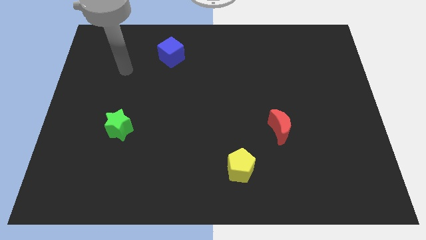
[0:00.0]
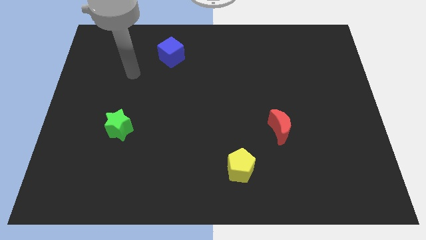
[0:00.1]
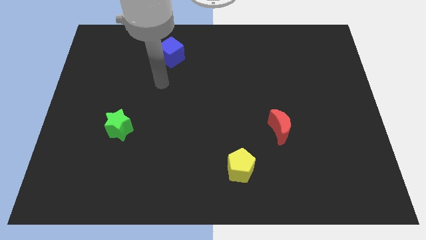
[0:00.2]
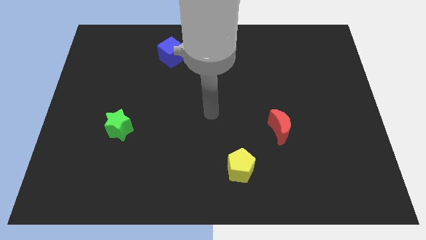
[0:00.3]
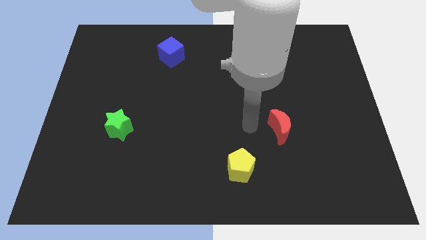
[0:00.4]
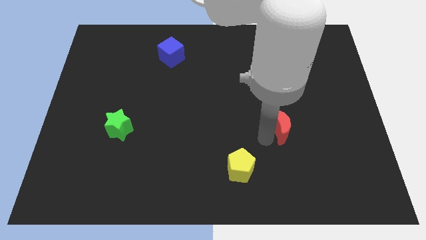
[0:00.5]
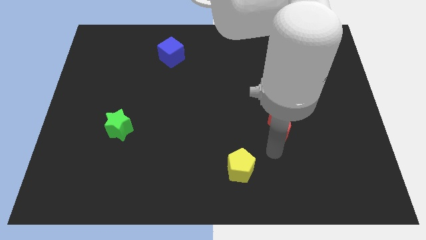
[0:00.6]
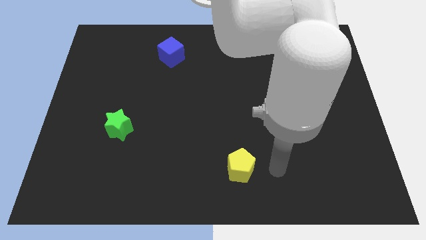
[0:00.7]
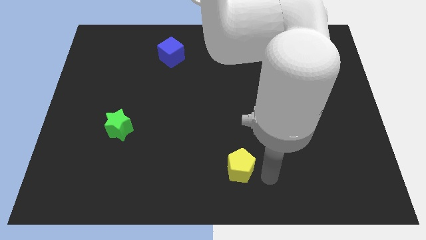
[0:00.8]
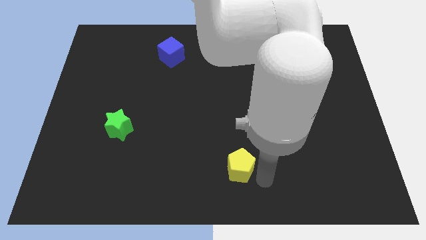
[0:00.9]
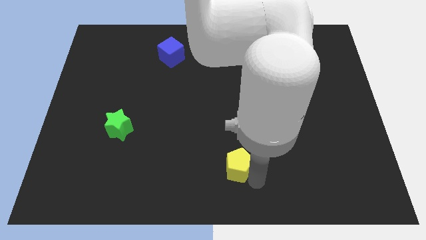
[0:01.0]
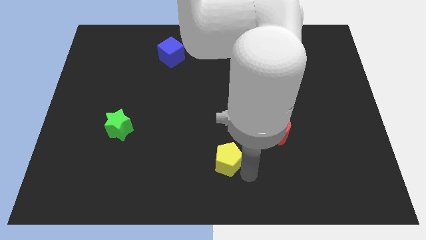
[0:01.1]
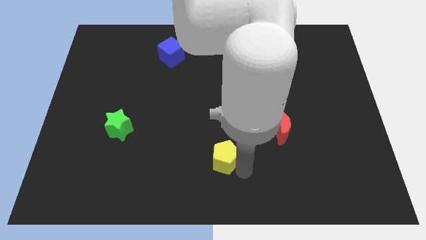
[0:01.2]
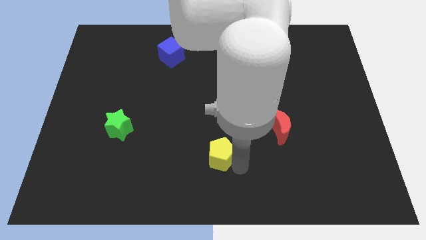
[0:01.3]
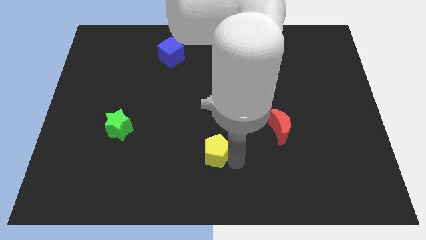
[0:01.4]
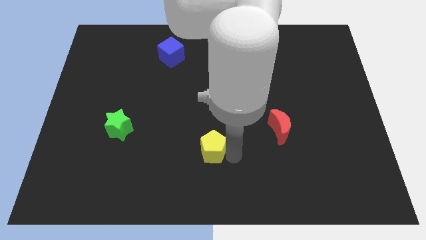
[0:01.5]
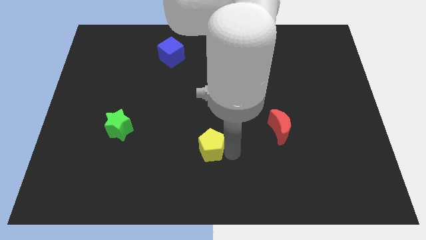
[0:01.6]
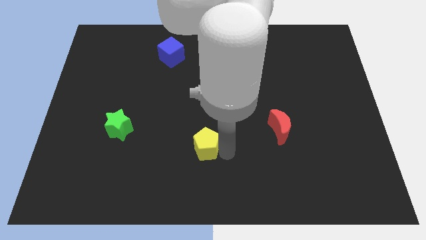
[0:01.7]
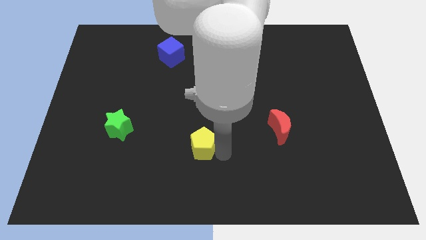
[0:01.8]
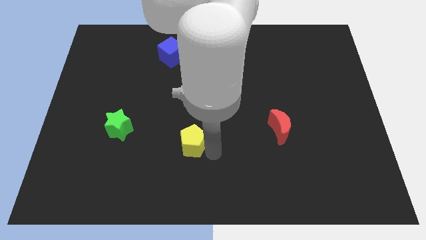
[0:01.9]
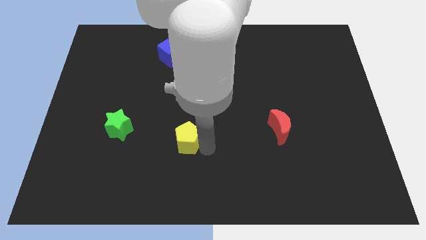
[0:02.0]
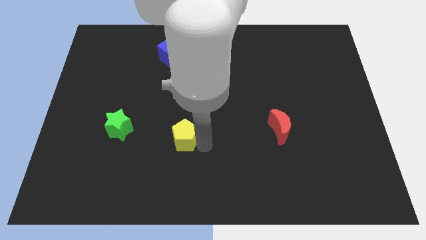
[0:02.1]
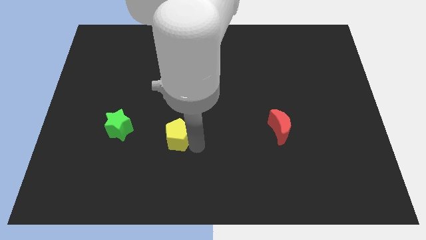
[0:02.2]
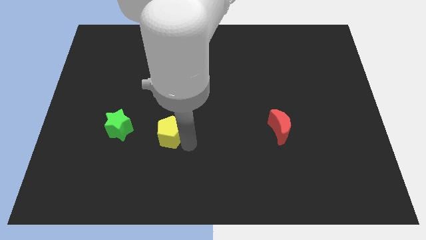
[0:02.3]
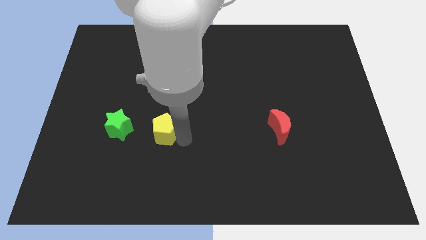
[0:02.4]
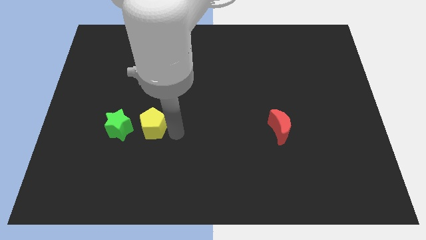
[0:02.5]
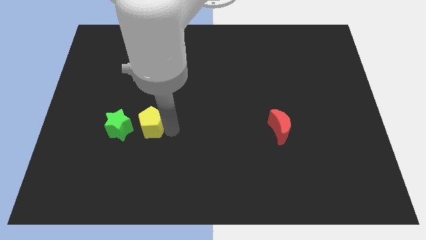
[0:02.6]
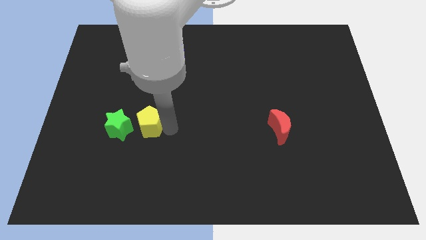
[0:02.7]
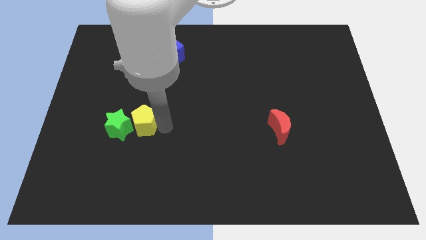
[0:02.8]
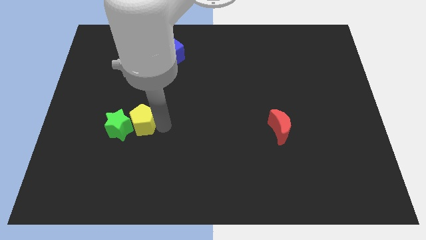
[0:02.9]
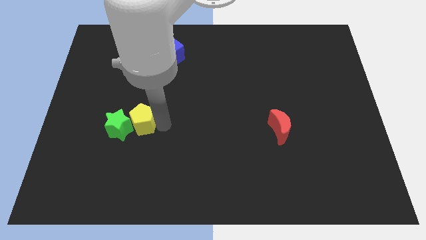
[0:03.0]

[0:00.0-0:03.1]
push the yellow block towards the green block

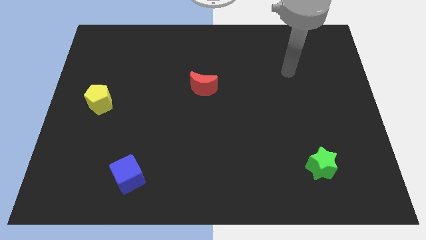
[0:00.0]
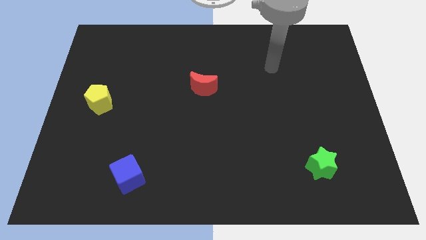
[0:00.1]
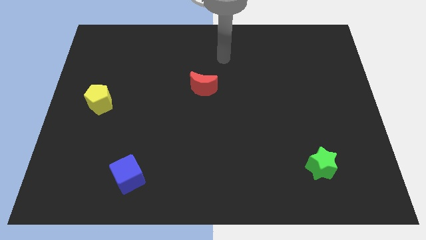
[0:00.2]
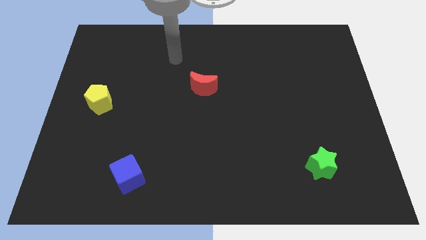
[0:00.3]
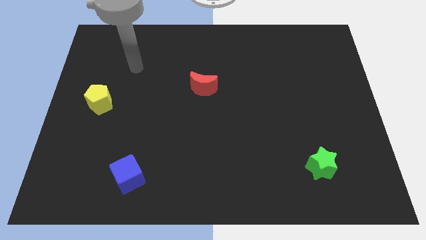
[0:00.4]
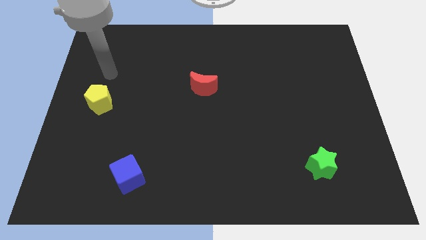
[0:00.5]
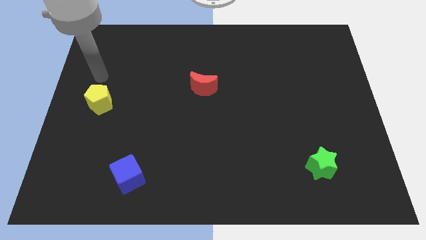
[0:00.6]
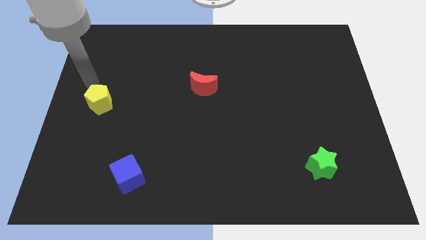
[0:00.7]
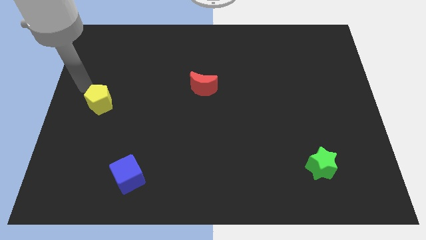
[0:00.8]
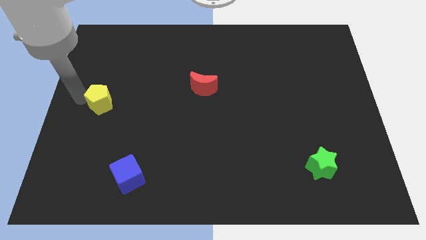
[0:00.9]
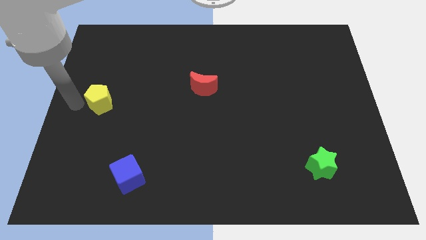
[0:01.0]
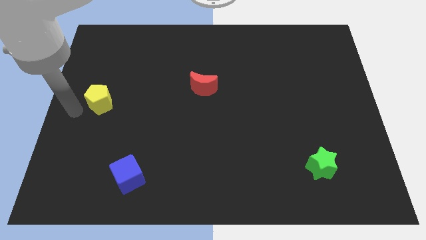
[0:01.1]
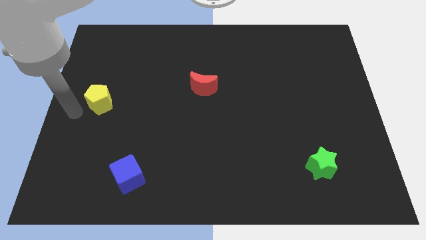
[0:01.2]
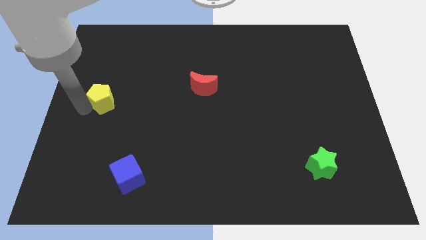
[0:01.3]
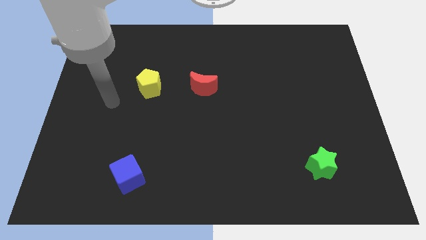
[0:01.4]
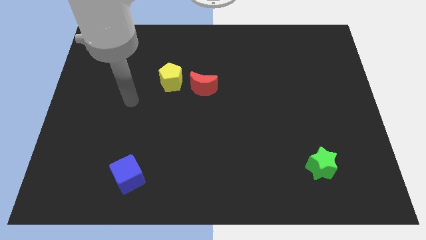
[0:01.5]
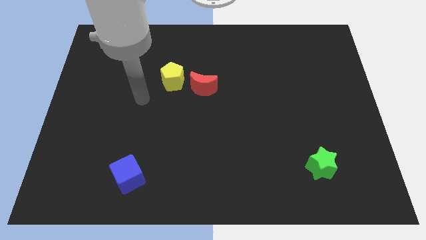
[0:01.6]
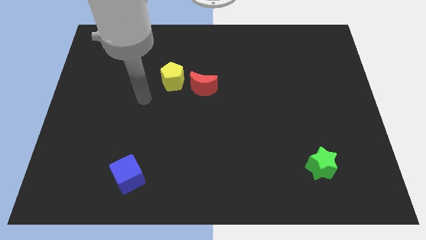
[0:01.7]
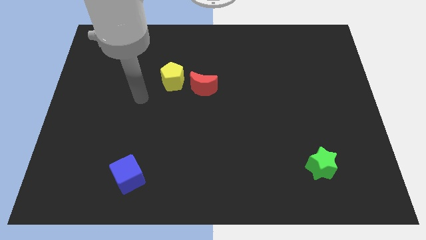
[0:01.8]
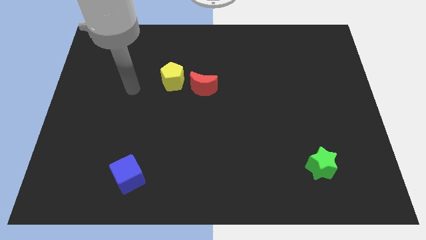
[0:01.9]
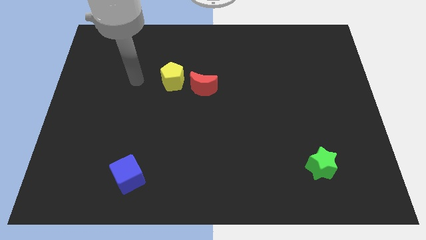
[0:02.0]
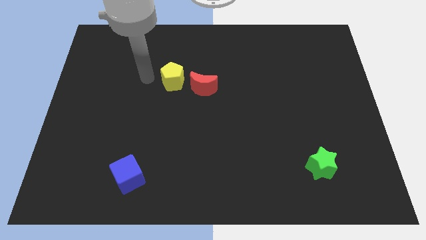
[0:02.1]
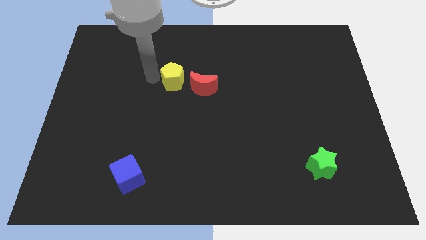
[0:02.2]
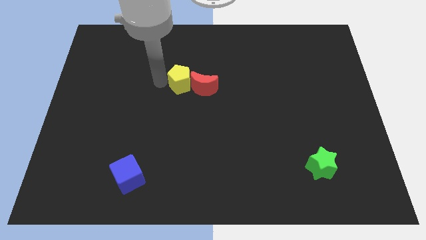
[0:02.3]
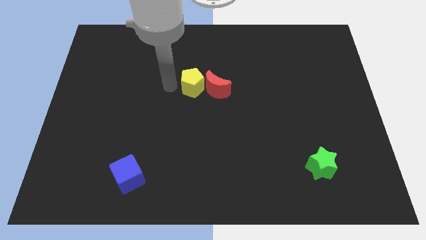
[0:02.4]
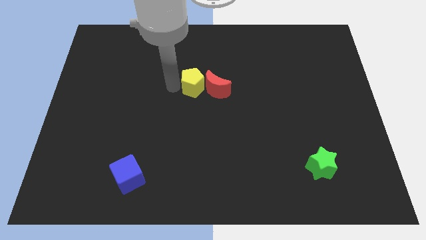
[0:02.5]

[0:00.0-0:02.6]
put the pentagon to the moon

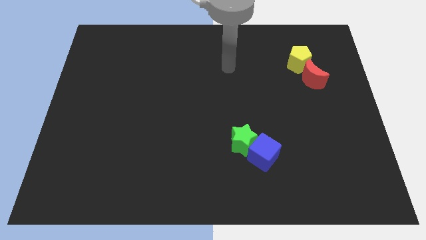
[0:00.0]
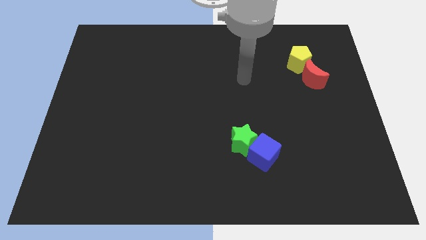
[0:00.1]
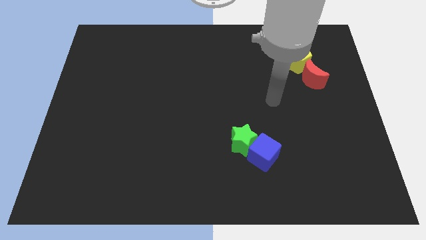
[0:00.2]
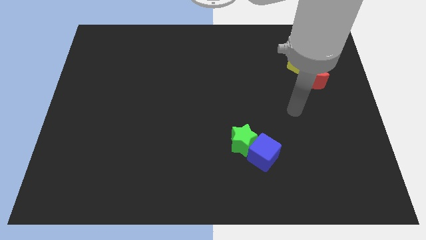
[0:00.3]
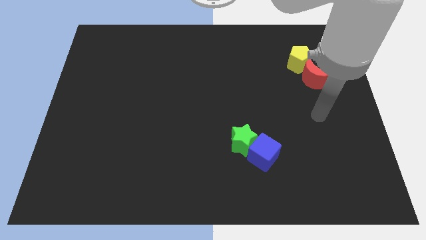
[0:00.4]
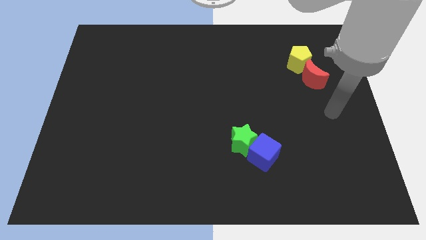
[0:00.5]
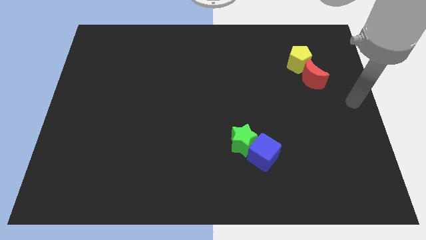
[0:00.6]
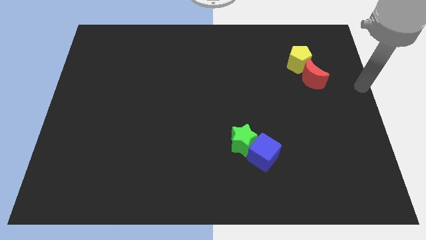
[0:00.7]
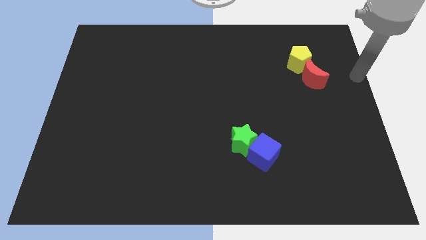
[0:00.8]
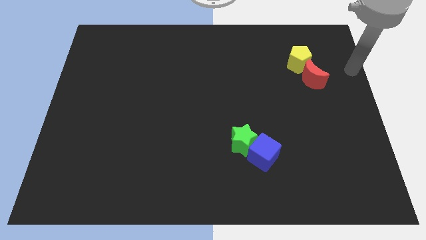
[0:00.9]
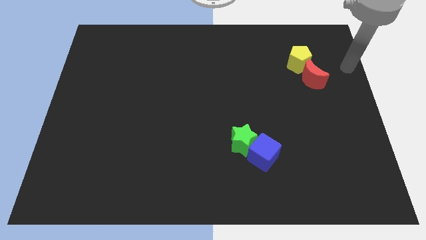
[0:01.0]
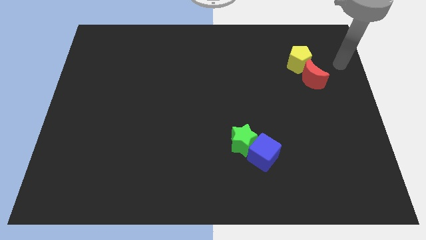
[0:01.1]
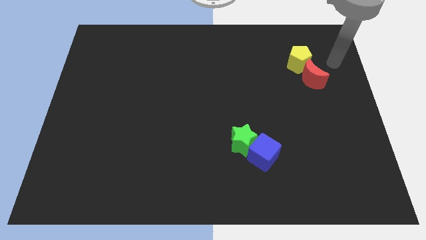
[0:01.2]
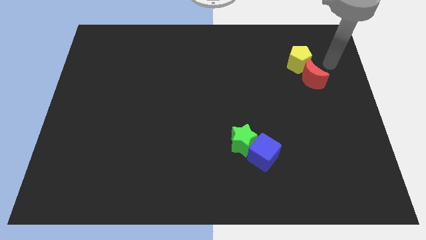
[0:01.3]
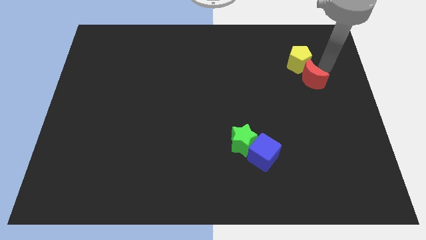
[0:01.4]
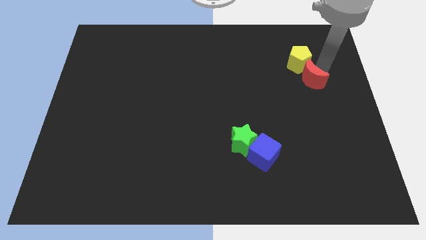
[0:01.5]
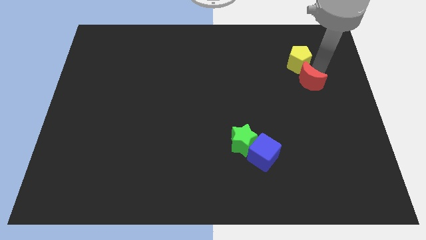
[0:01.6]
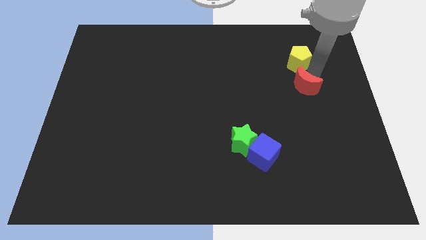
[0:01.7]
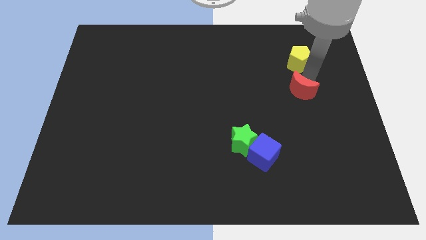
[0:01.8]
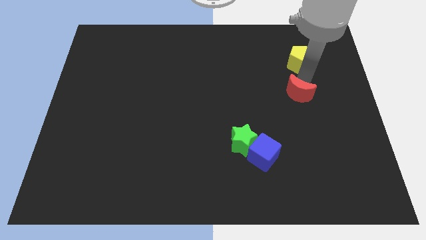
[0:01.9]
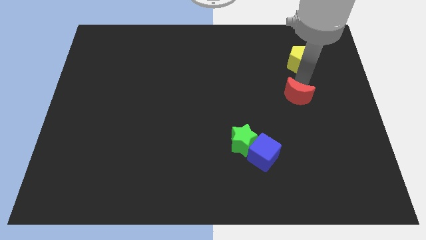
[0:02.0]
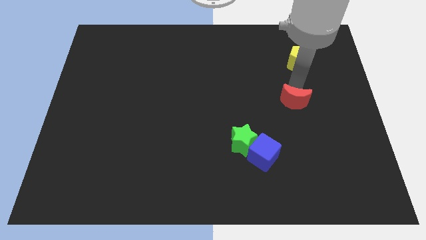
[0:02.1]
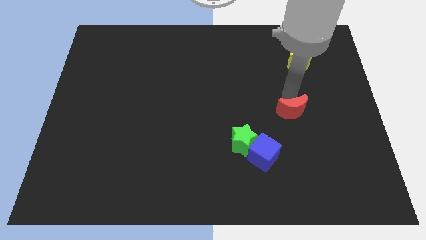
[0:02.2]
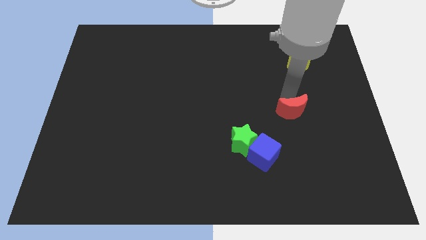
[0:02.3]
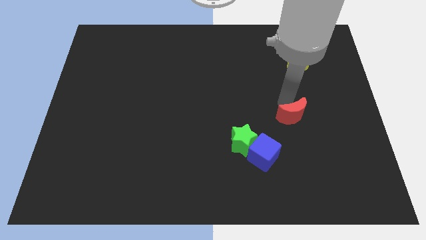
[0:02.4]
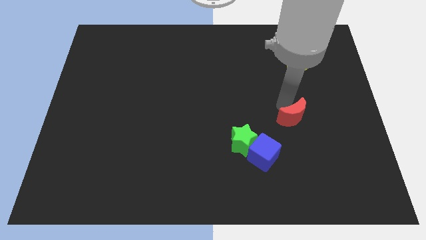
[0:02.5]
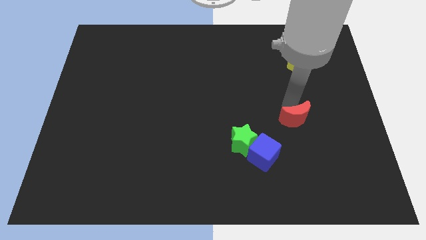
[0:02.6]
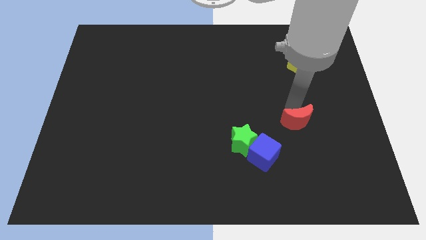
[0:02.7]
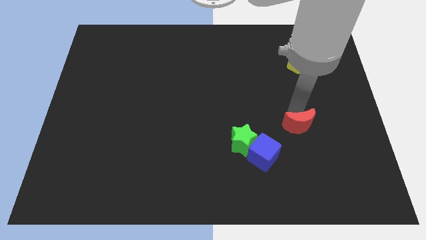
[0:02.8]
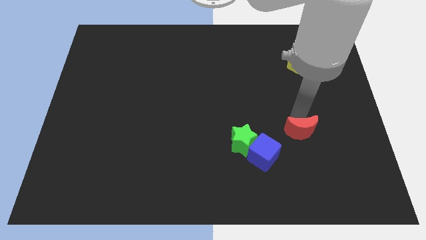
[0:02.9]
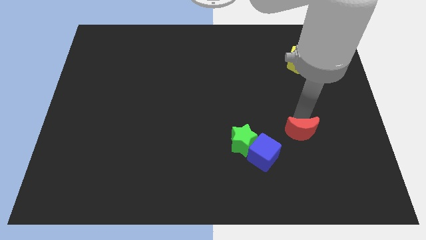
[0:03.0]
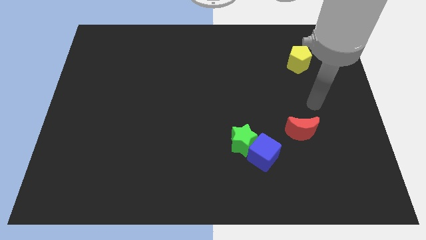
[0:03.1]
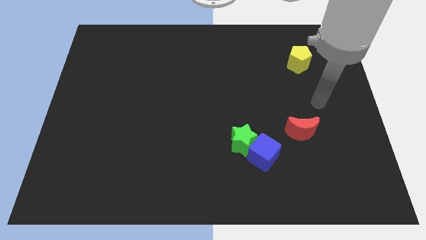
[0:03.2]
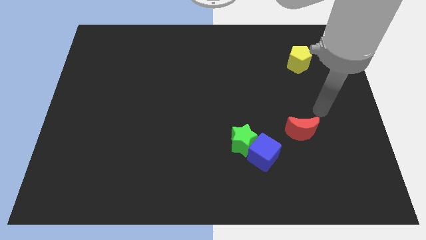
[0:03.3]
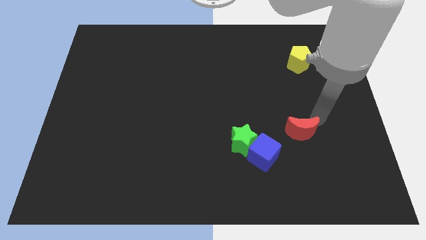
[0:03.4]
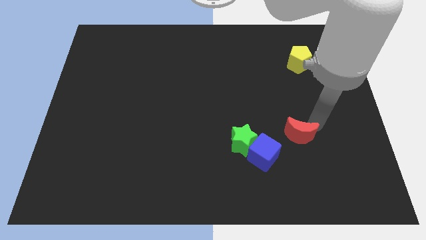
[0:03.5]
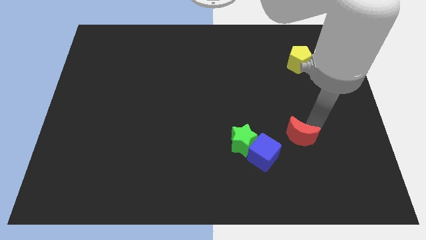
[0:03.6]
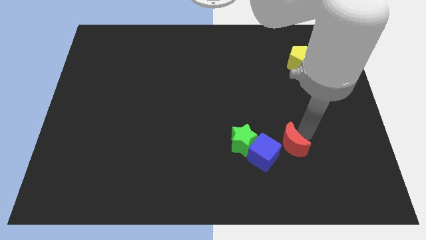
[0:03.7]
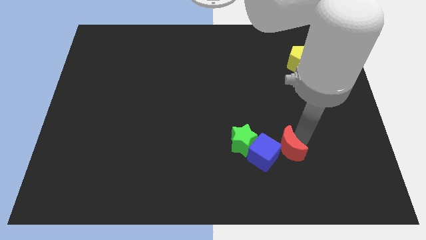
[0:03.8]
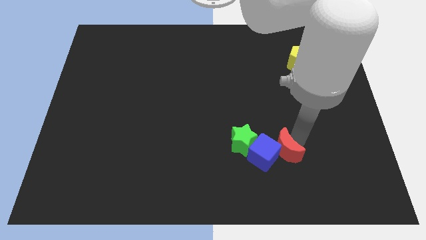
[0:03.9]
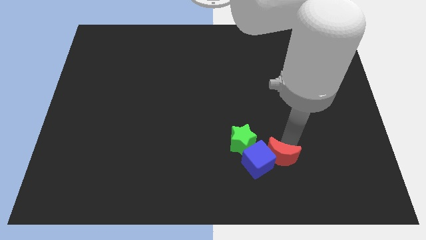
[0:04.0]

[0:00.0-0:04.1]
move the moon close to the blue cube
